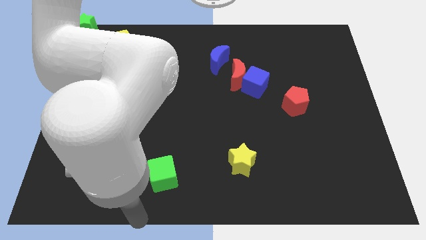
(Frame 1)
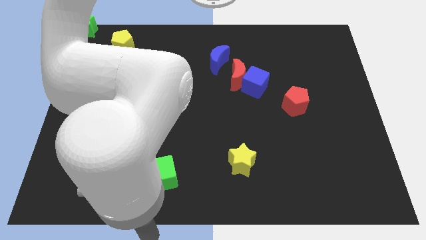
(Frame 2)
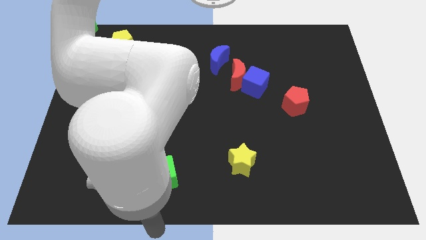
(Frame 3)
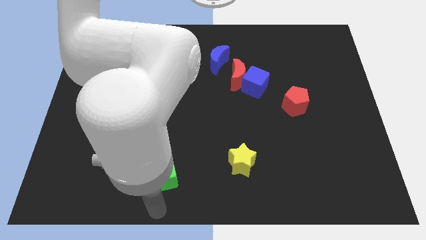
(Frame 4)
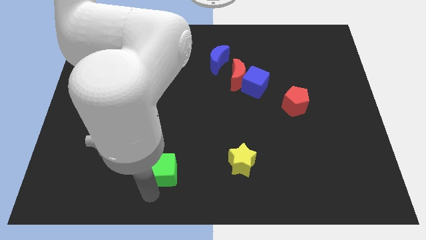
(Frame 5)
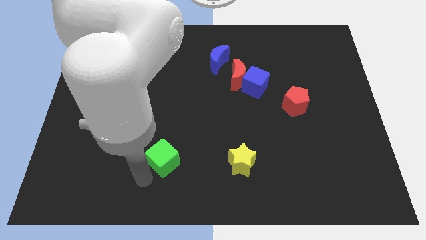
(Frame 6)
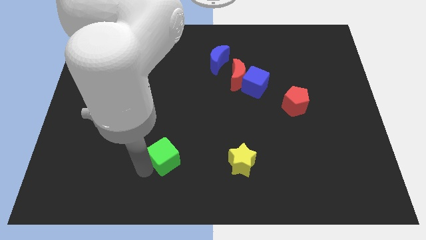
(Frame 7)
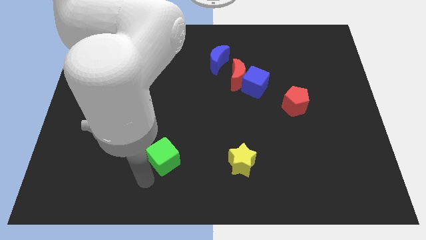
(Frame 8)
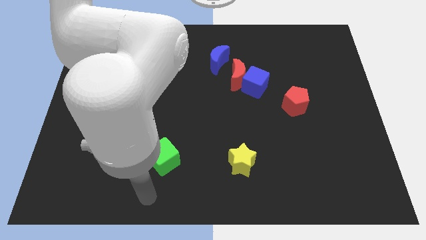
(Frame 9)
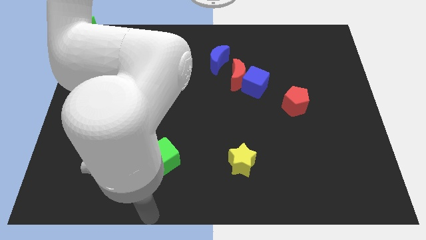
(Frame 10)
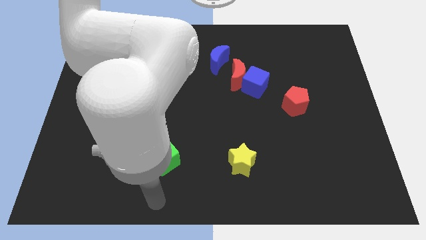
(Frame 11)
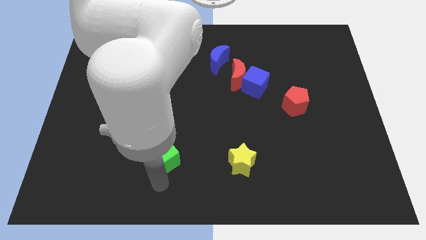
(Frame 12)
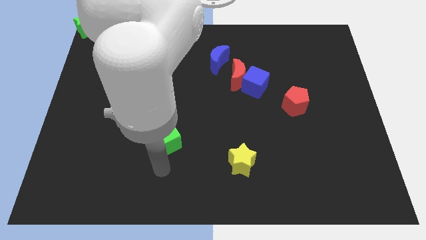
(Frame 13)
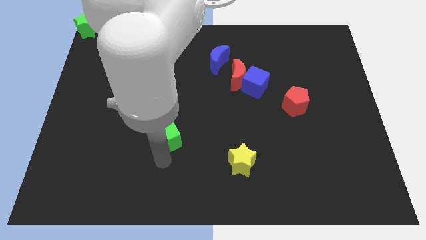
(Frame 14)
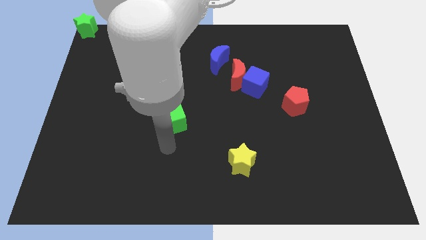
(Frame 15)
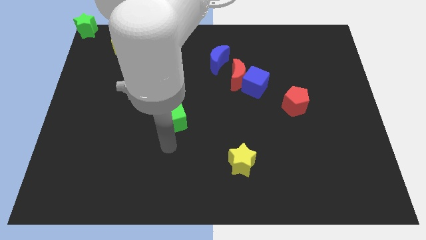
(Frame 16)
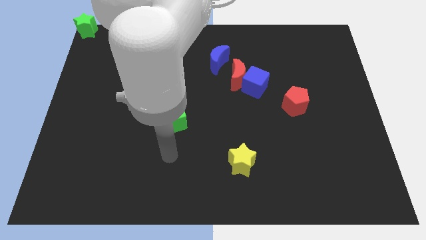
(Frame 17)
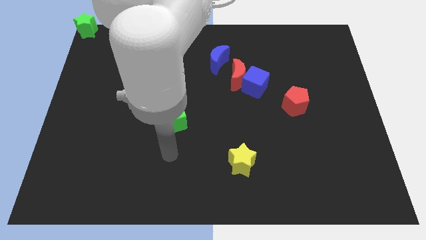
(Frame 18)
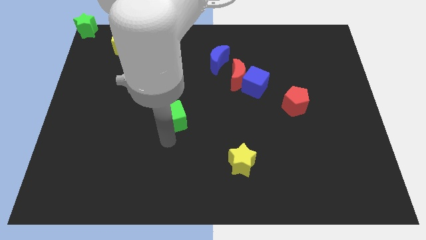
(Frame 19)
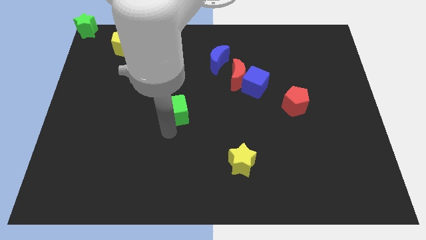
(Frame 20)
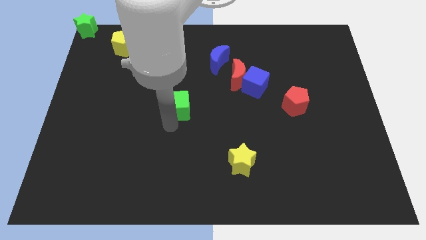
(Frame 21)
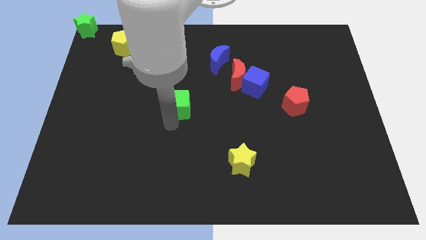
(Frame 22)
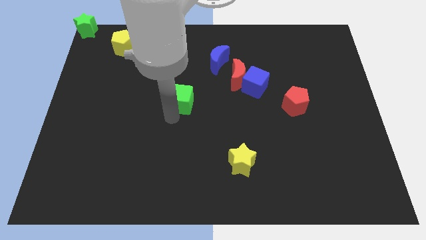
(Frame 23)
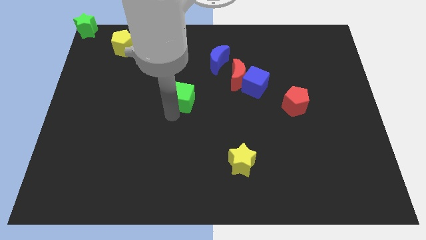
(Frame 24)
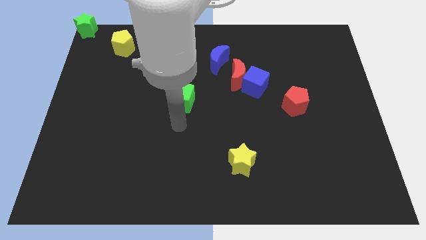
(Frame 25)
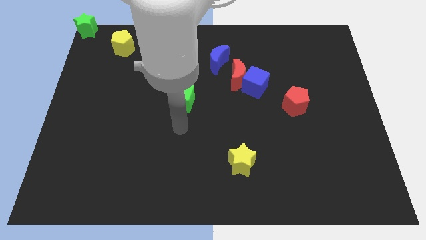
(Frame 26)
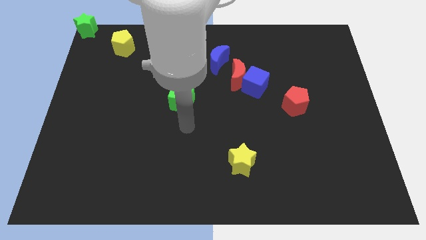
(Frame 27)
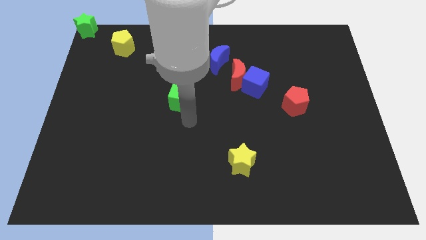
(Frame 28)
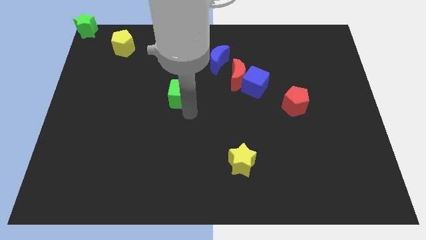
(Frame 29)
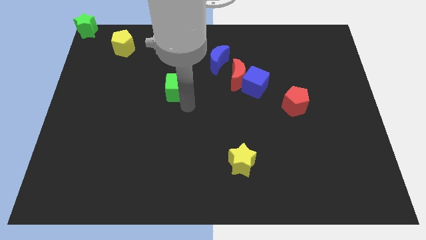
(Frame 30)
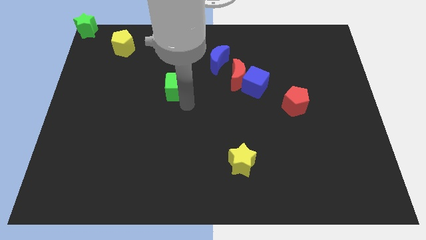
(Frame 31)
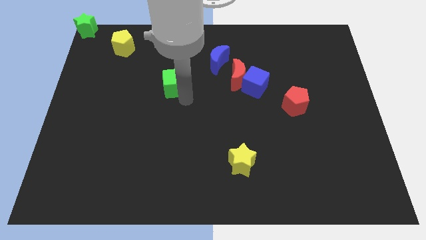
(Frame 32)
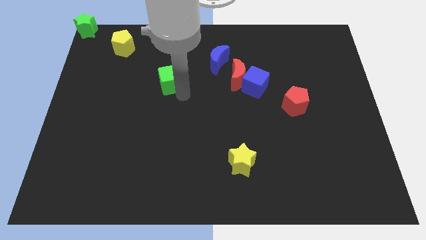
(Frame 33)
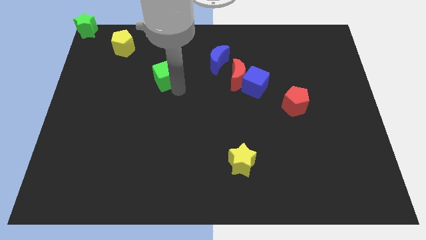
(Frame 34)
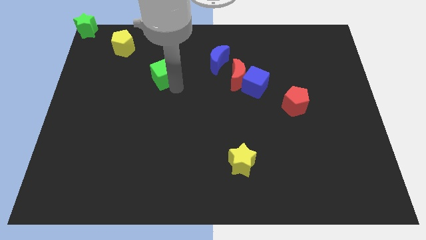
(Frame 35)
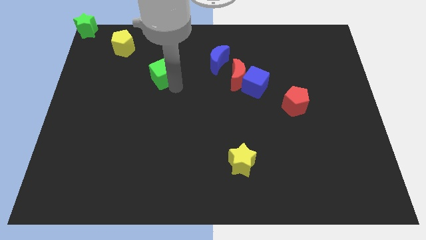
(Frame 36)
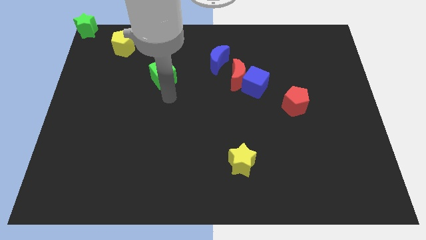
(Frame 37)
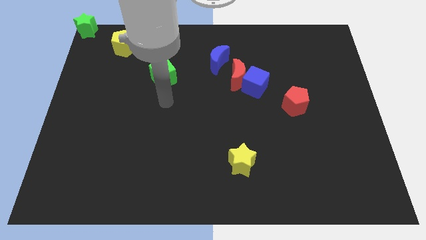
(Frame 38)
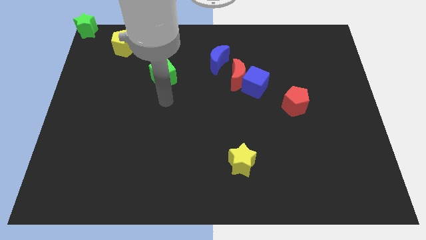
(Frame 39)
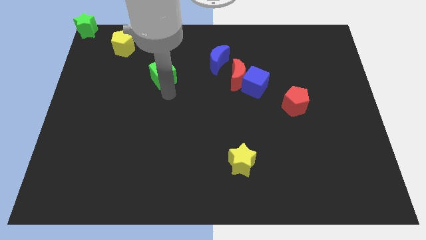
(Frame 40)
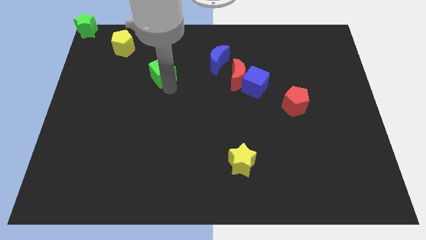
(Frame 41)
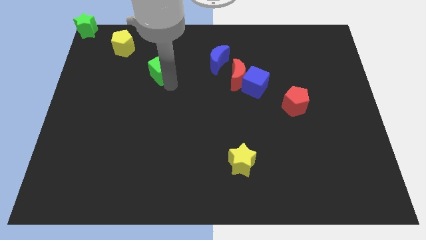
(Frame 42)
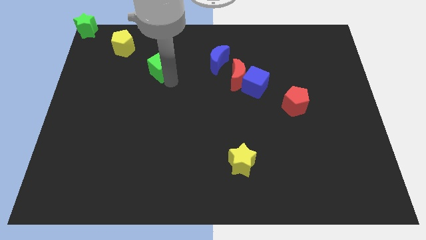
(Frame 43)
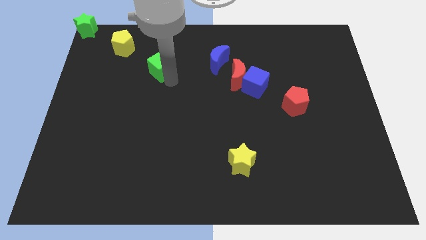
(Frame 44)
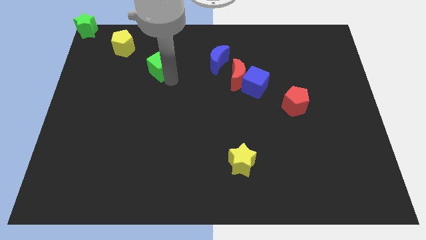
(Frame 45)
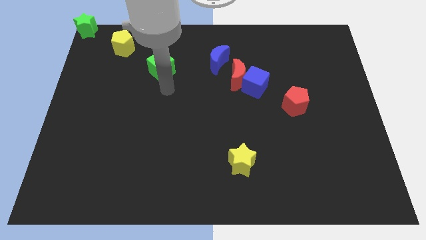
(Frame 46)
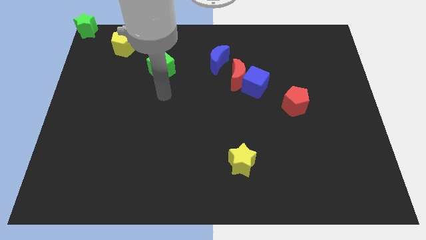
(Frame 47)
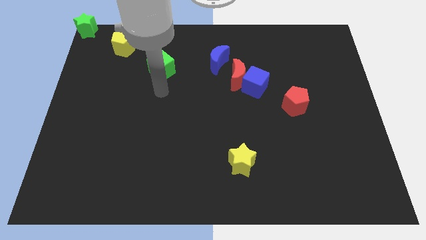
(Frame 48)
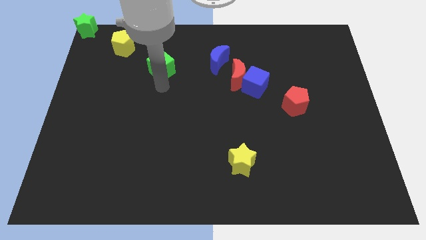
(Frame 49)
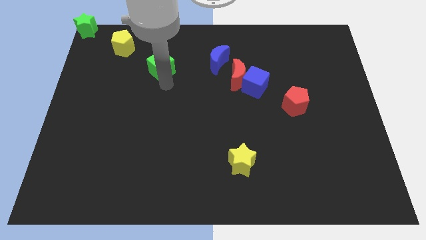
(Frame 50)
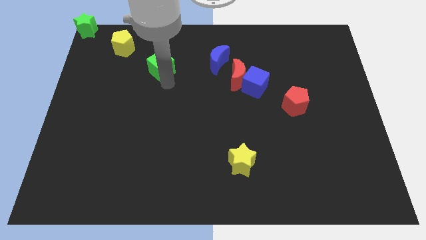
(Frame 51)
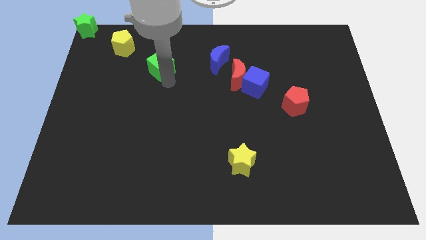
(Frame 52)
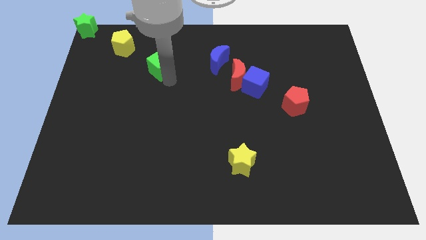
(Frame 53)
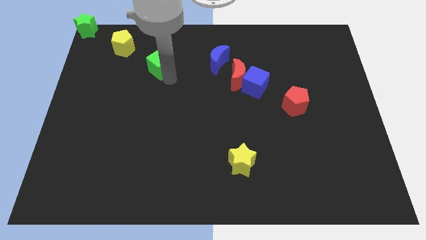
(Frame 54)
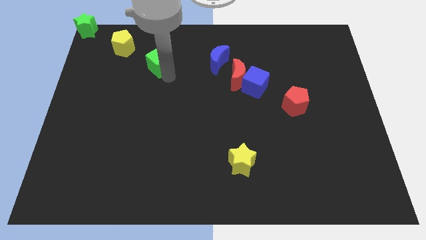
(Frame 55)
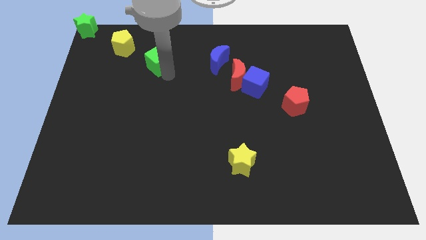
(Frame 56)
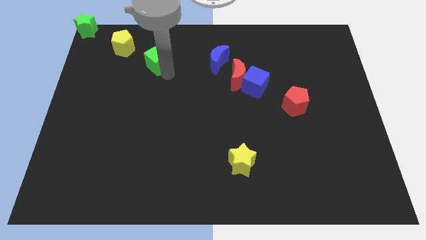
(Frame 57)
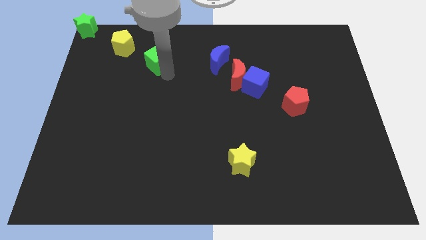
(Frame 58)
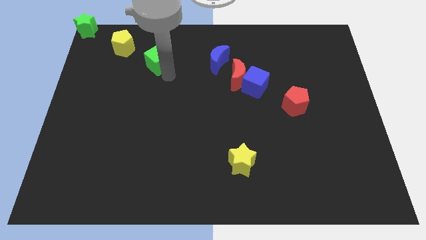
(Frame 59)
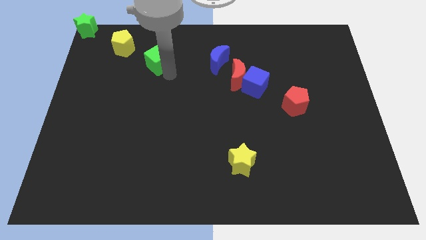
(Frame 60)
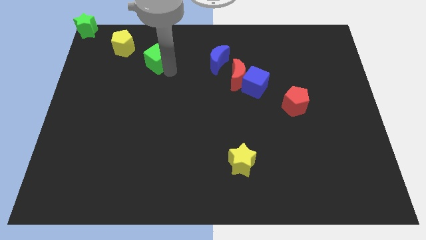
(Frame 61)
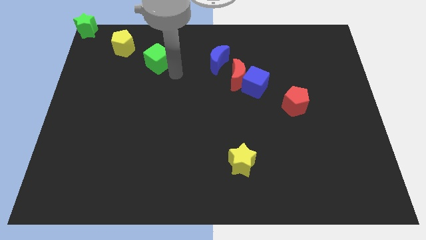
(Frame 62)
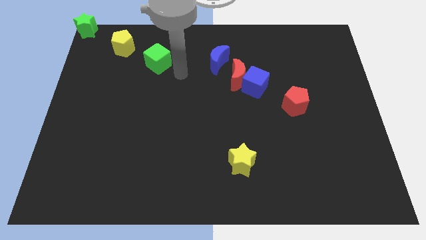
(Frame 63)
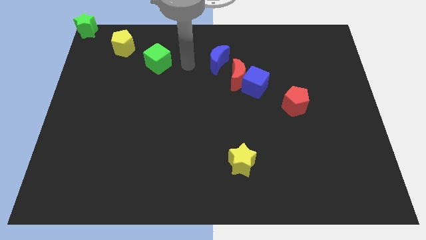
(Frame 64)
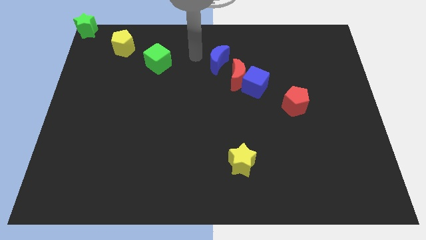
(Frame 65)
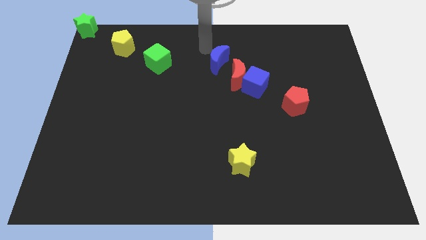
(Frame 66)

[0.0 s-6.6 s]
move green cube towards the yellow pentagon

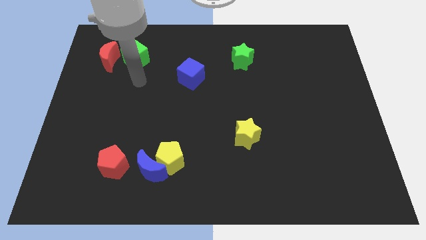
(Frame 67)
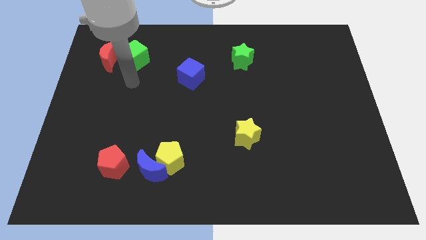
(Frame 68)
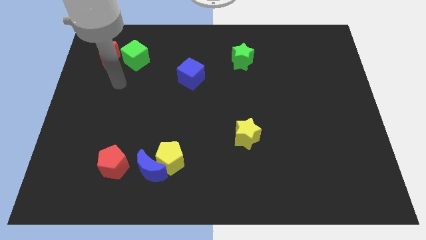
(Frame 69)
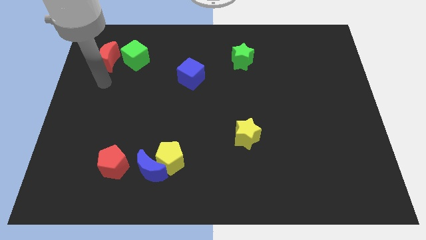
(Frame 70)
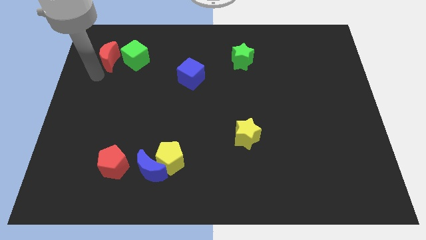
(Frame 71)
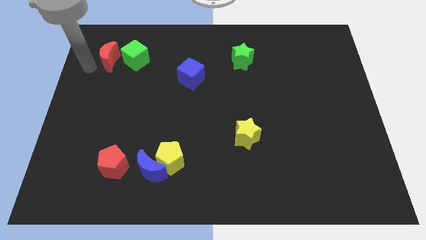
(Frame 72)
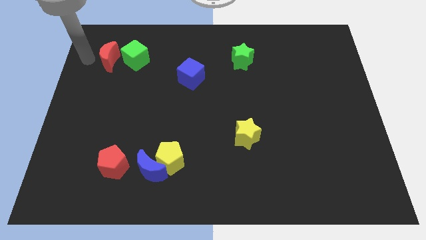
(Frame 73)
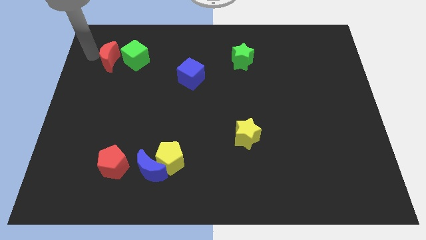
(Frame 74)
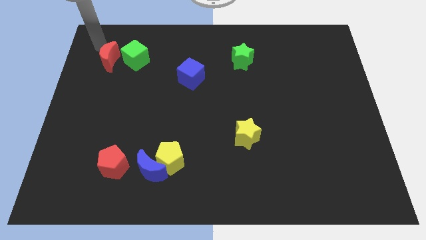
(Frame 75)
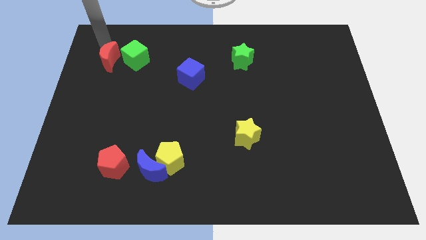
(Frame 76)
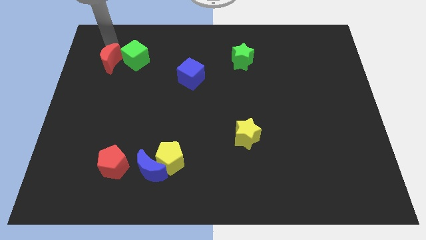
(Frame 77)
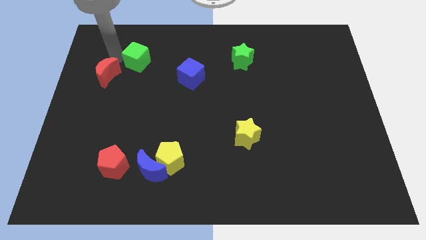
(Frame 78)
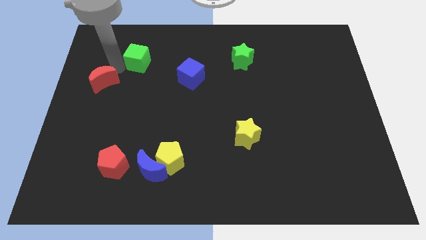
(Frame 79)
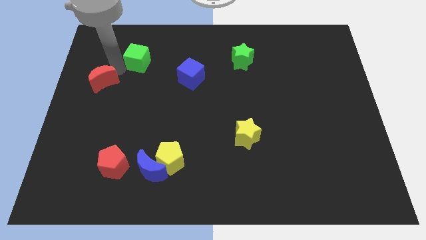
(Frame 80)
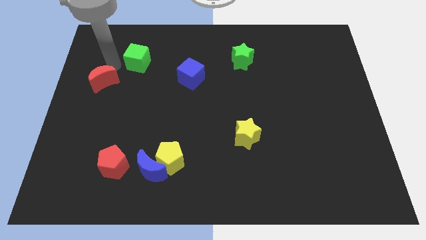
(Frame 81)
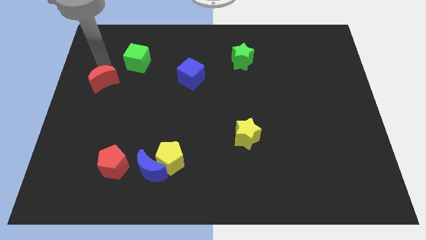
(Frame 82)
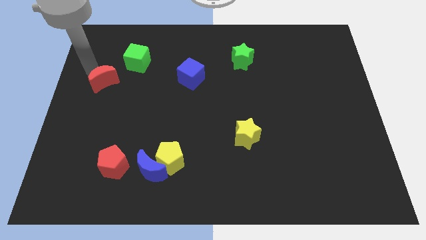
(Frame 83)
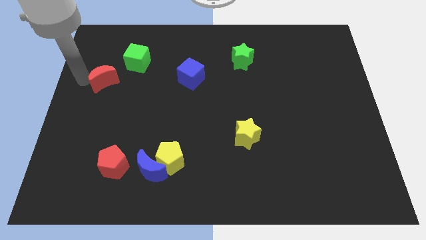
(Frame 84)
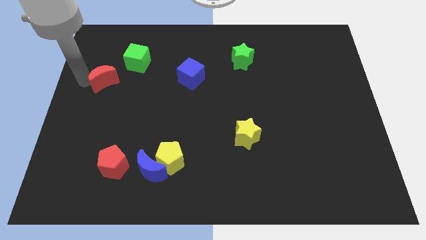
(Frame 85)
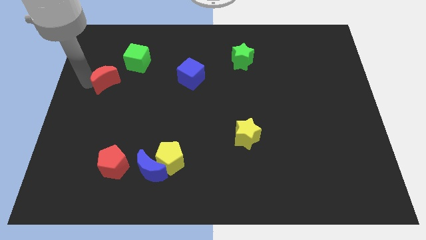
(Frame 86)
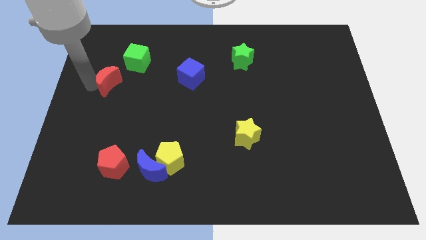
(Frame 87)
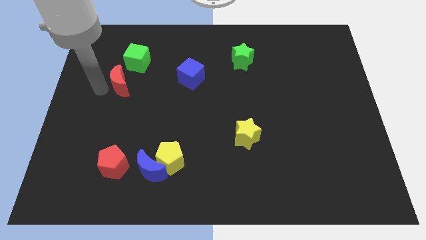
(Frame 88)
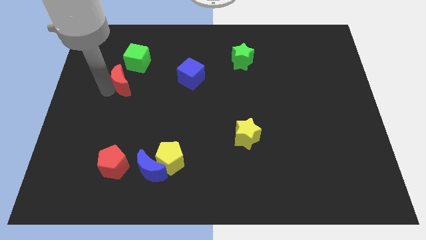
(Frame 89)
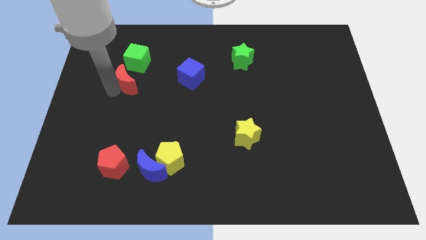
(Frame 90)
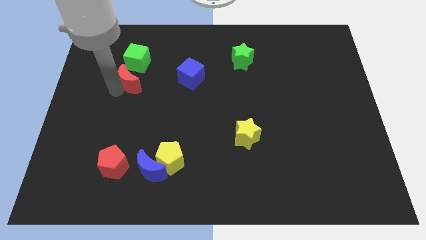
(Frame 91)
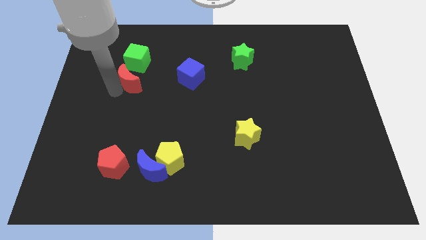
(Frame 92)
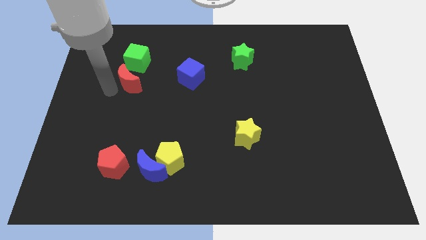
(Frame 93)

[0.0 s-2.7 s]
place the red moon below the green cube
